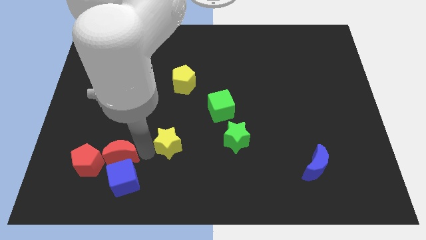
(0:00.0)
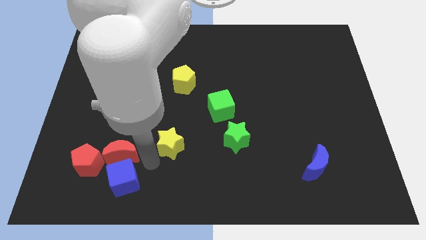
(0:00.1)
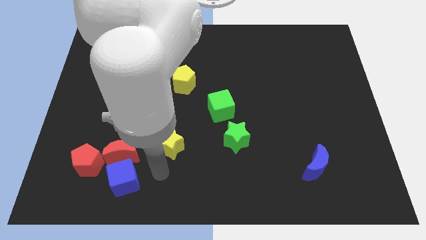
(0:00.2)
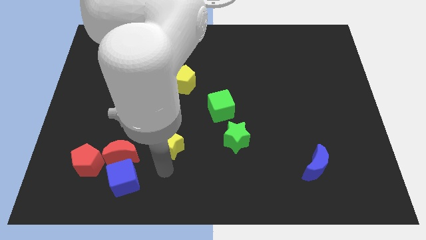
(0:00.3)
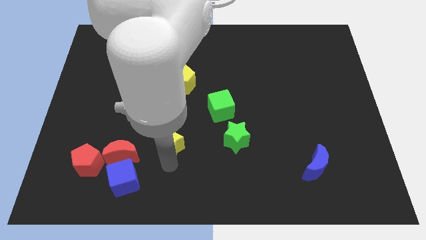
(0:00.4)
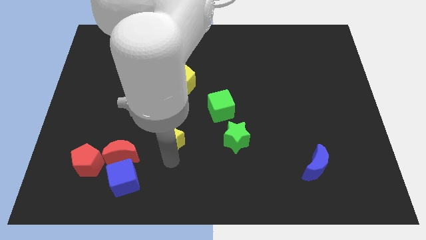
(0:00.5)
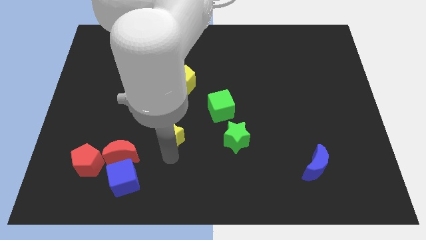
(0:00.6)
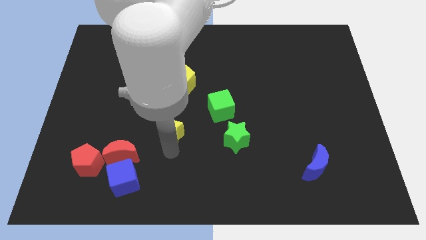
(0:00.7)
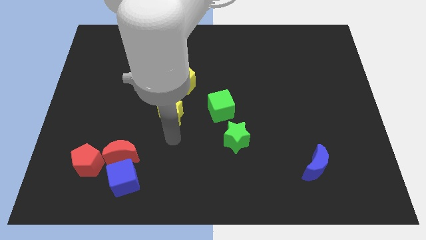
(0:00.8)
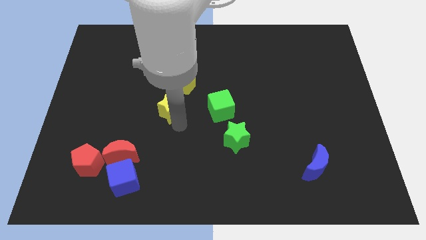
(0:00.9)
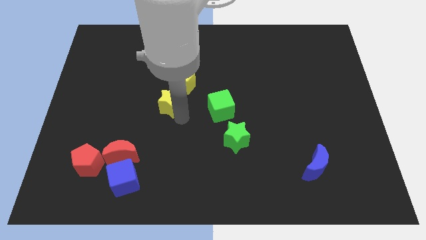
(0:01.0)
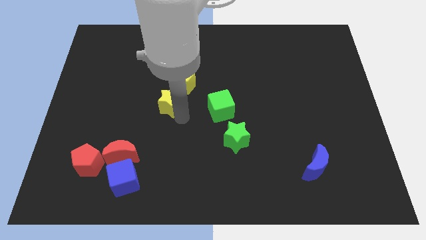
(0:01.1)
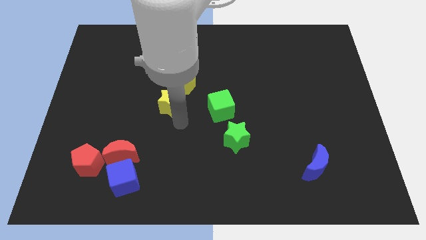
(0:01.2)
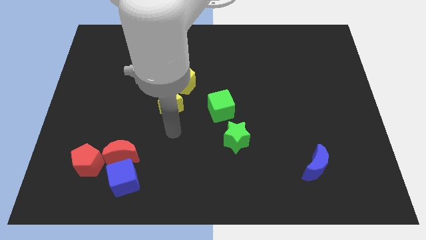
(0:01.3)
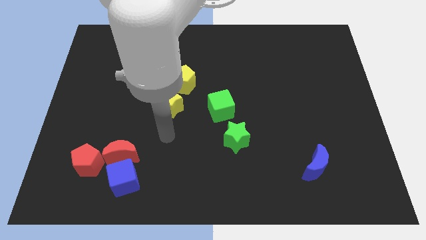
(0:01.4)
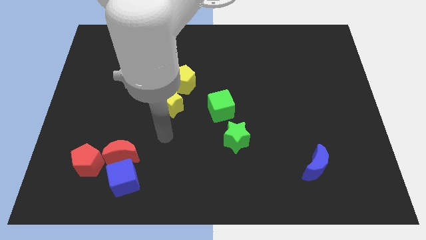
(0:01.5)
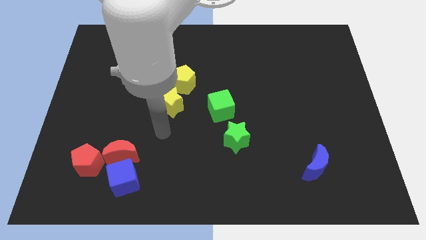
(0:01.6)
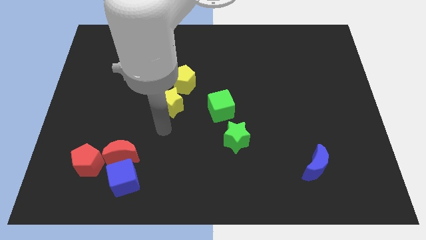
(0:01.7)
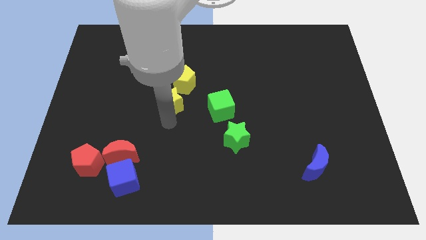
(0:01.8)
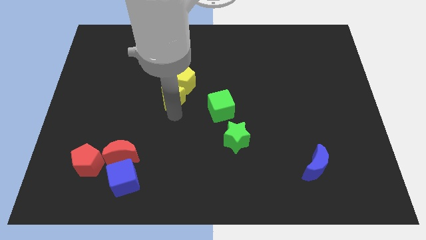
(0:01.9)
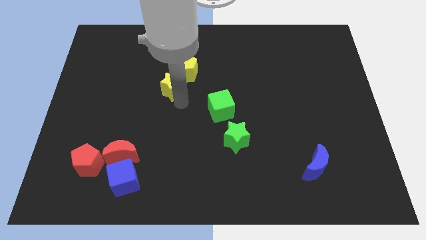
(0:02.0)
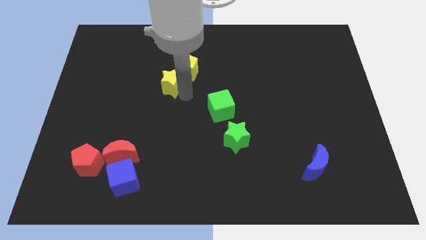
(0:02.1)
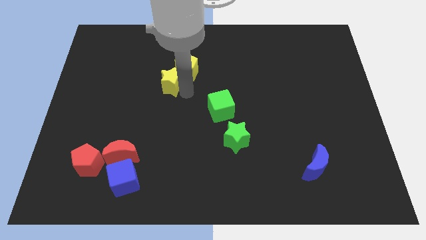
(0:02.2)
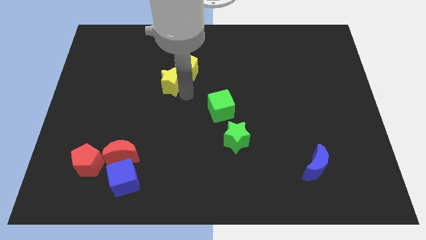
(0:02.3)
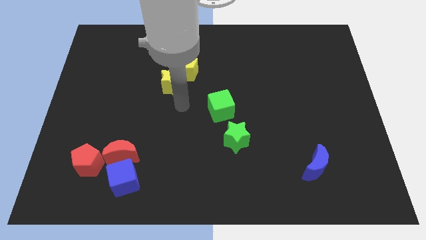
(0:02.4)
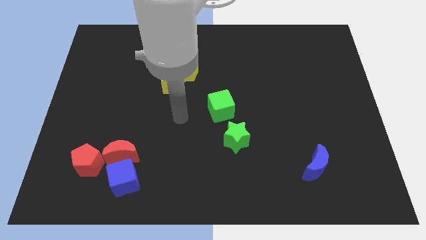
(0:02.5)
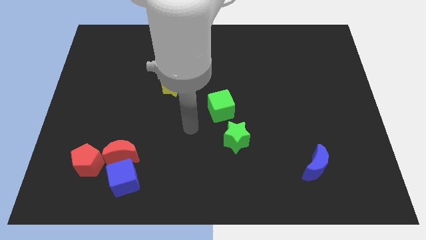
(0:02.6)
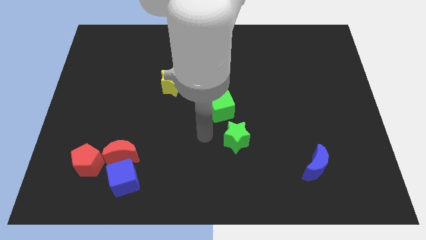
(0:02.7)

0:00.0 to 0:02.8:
move the yellow star into the yellow pentagon

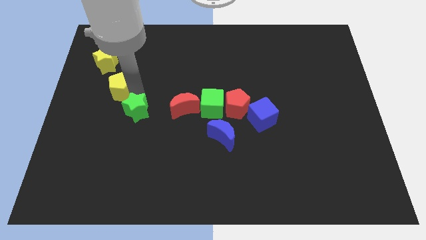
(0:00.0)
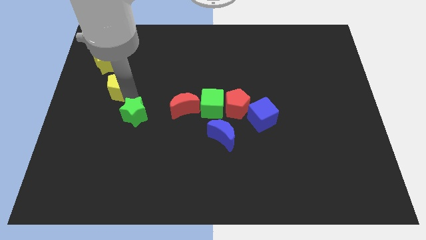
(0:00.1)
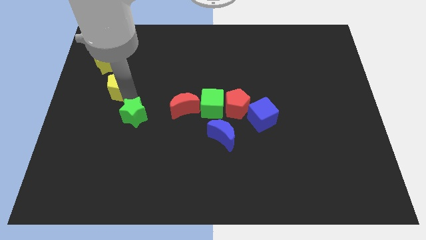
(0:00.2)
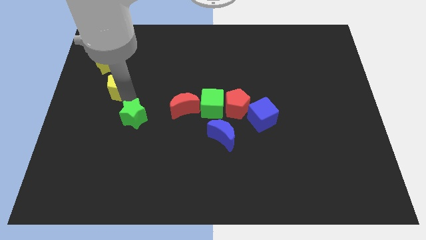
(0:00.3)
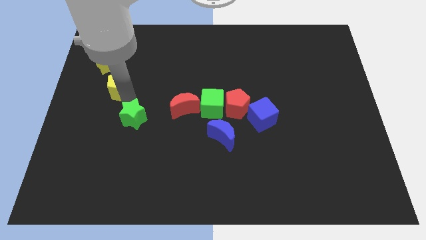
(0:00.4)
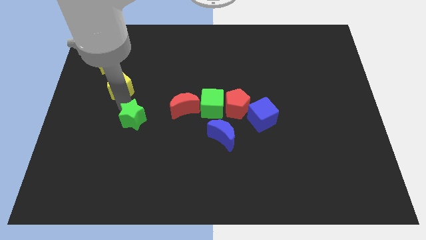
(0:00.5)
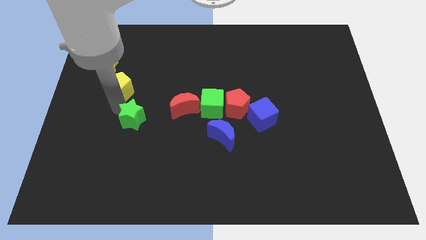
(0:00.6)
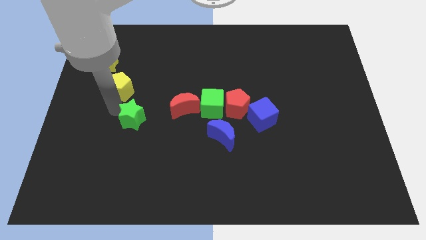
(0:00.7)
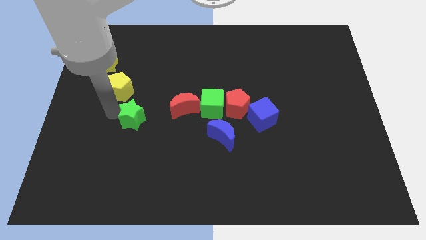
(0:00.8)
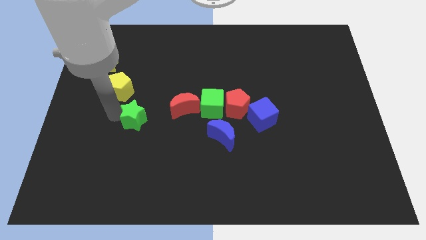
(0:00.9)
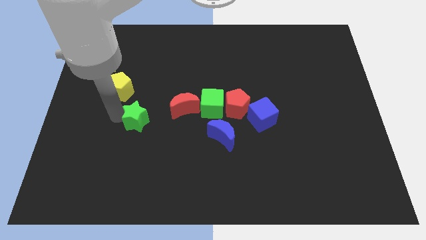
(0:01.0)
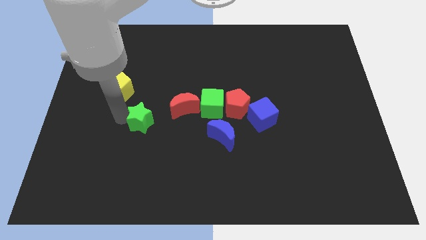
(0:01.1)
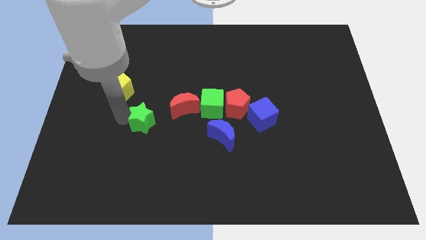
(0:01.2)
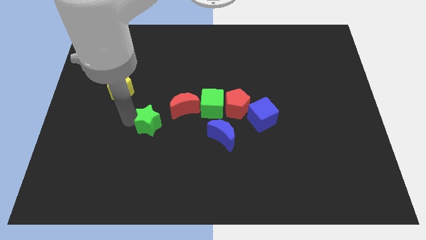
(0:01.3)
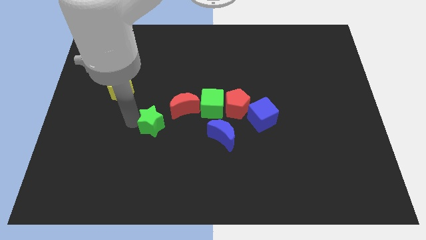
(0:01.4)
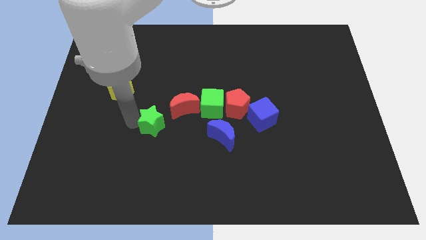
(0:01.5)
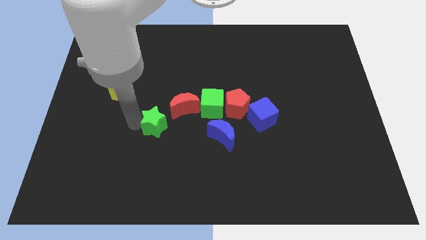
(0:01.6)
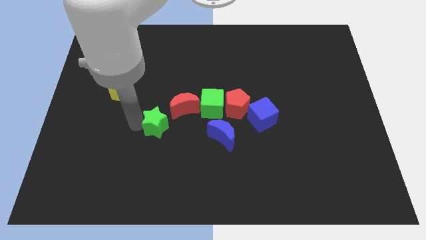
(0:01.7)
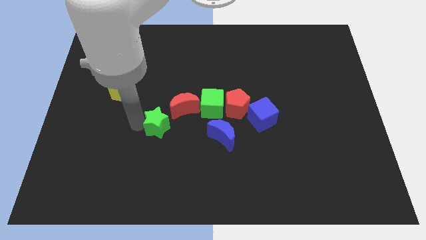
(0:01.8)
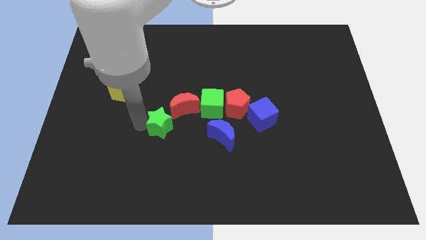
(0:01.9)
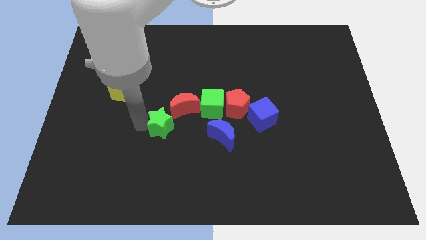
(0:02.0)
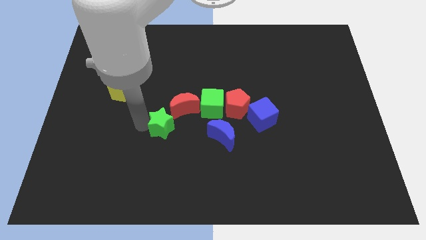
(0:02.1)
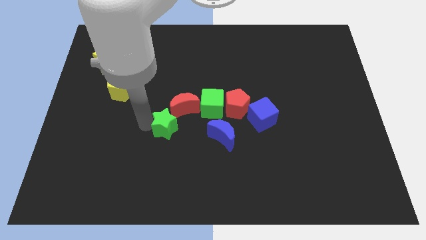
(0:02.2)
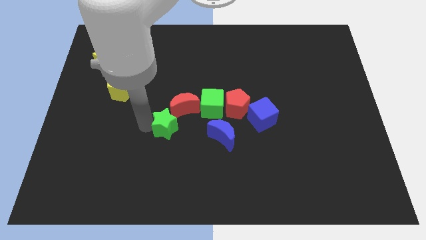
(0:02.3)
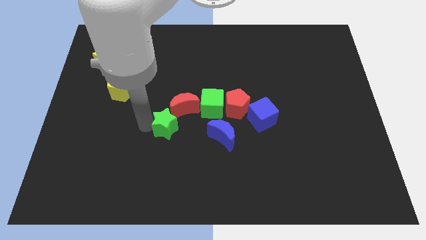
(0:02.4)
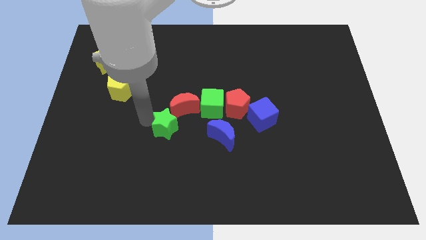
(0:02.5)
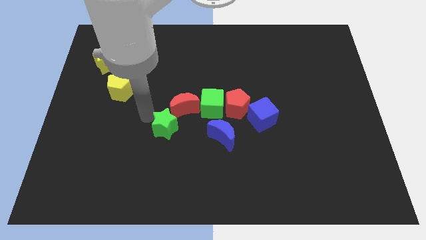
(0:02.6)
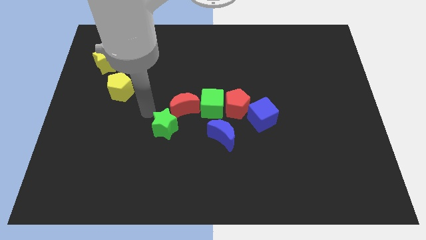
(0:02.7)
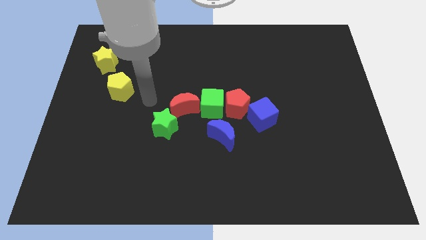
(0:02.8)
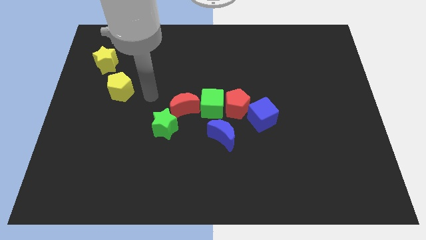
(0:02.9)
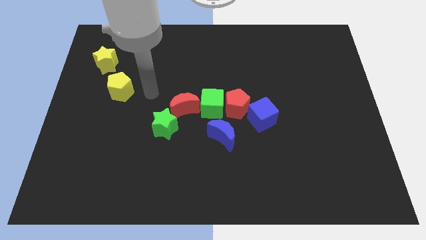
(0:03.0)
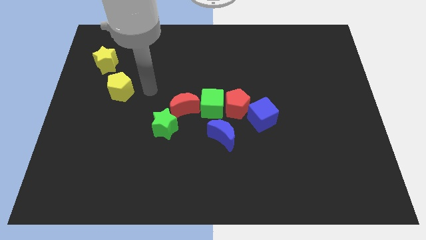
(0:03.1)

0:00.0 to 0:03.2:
push the green star to the bottom of the red moon

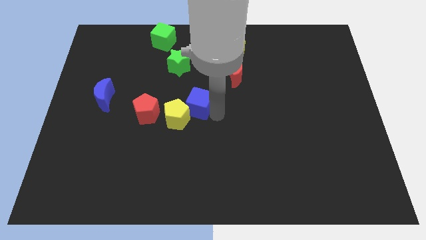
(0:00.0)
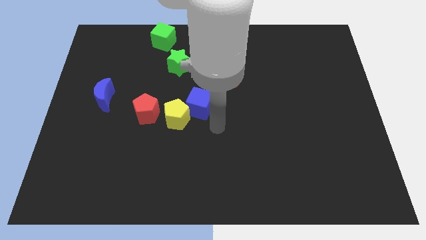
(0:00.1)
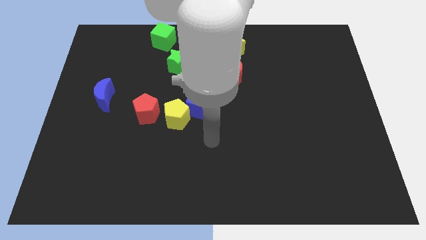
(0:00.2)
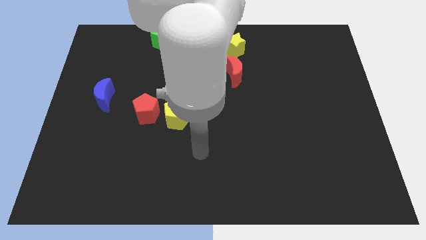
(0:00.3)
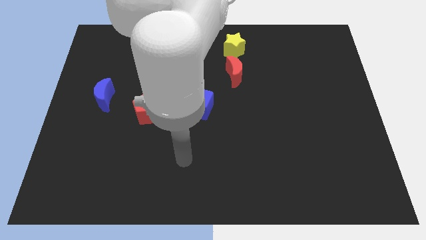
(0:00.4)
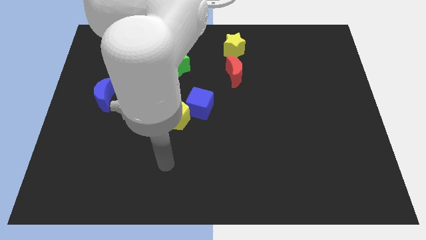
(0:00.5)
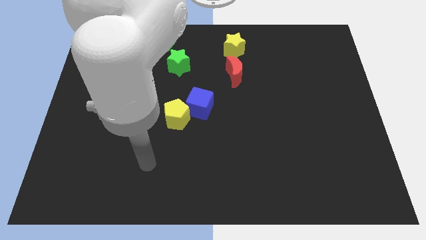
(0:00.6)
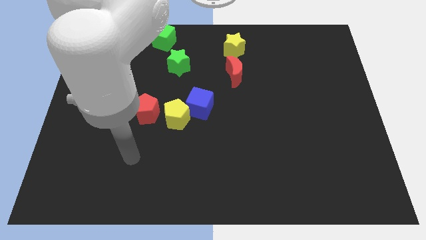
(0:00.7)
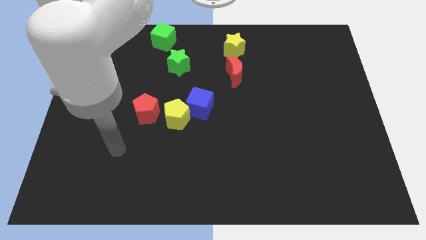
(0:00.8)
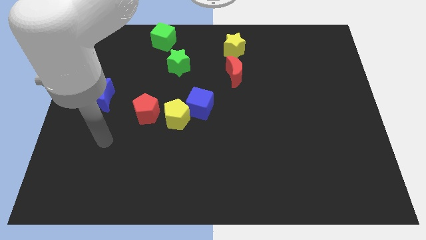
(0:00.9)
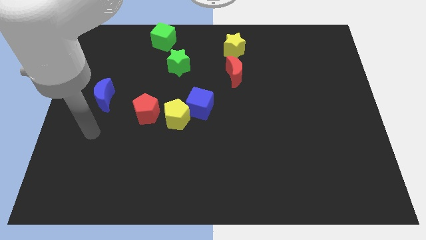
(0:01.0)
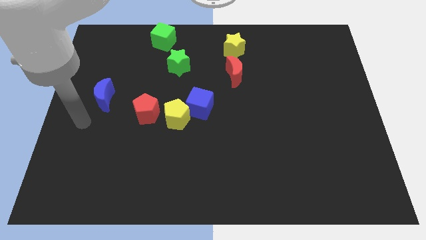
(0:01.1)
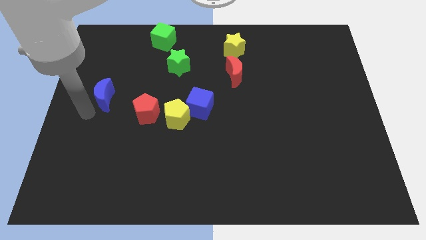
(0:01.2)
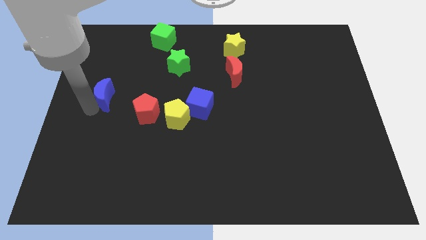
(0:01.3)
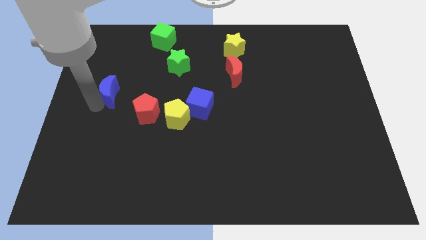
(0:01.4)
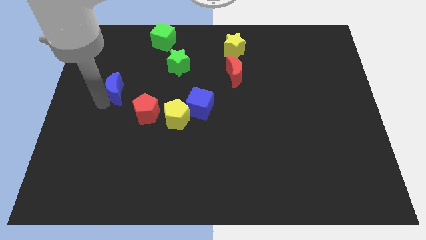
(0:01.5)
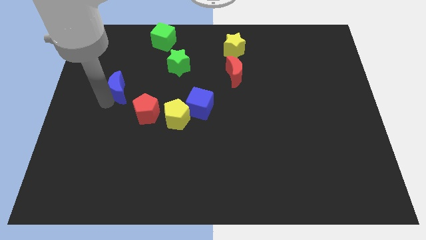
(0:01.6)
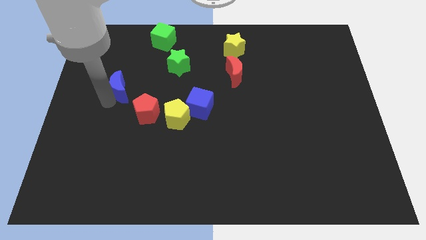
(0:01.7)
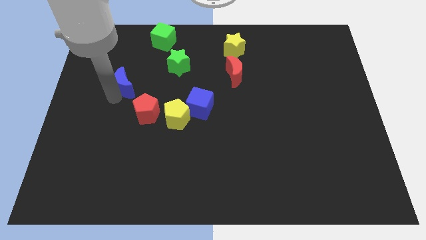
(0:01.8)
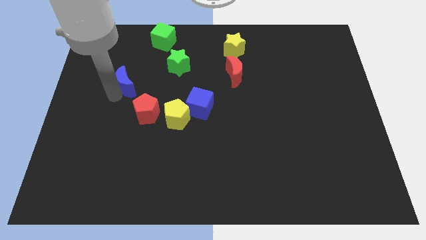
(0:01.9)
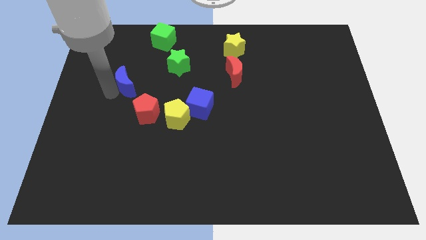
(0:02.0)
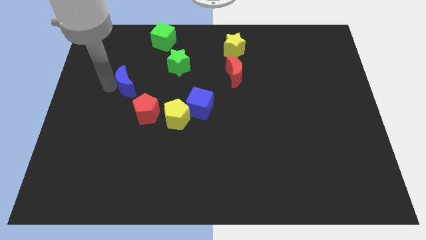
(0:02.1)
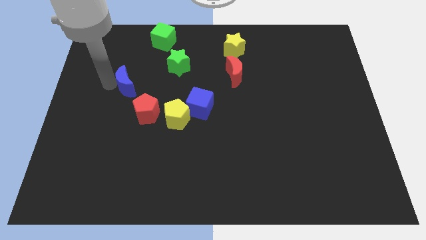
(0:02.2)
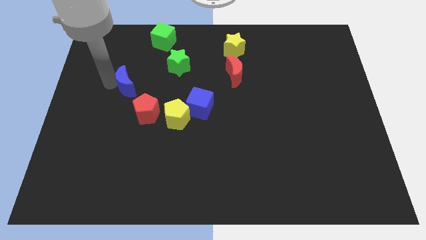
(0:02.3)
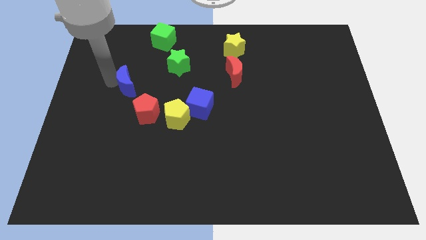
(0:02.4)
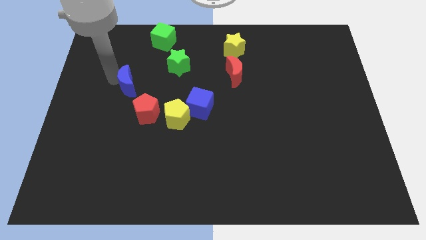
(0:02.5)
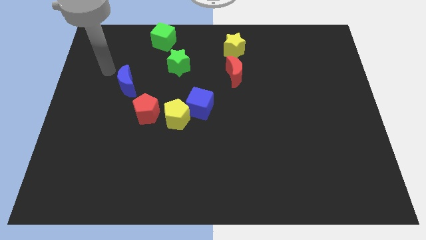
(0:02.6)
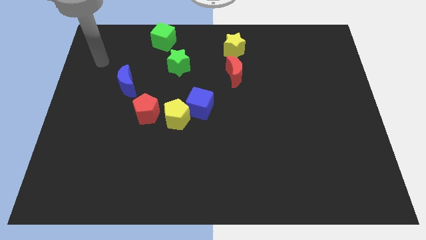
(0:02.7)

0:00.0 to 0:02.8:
place the blue crescent at the top left side of the red pentagon

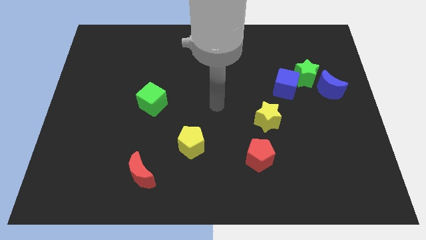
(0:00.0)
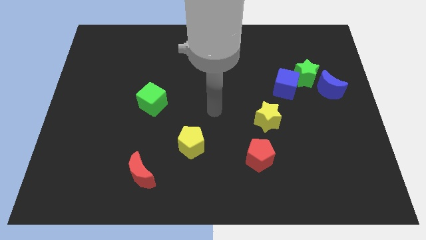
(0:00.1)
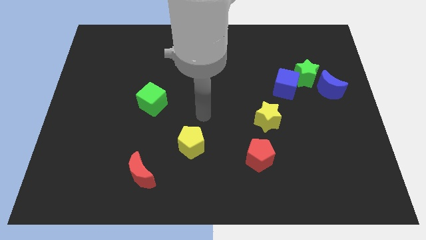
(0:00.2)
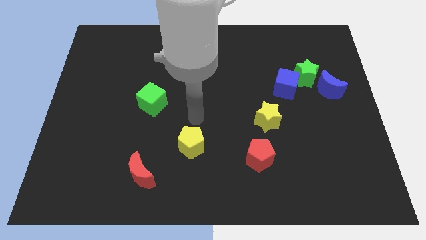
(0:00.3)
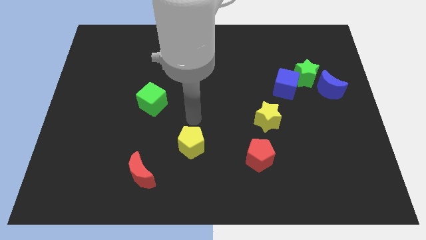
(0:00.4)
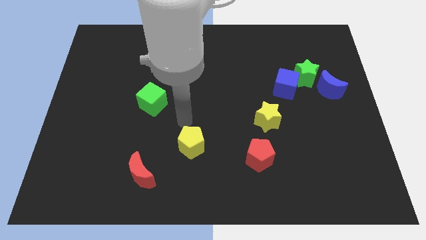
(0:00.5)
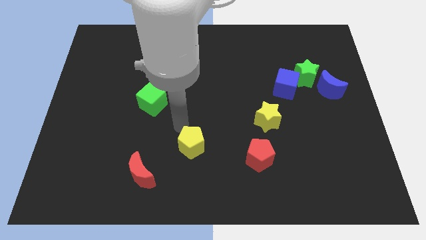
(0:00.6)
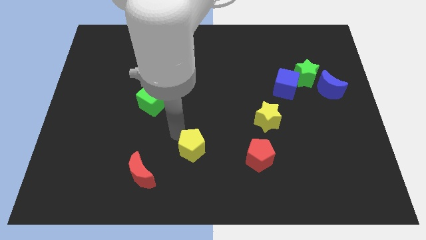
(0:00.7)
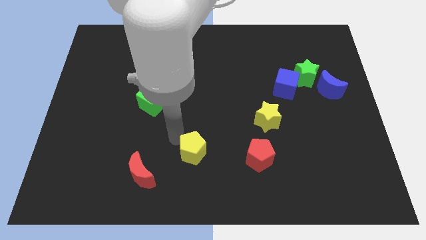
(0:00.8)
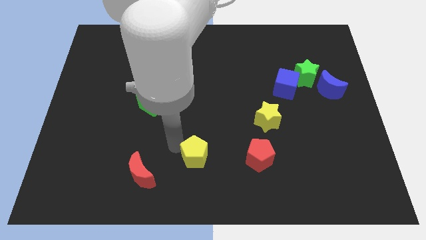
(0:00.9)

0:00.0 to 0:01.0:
move the yellow pentagon left to the red pentagon
